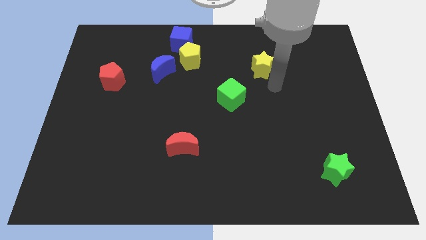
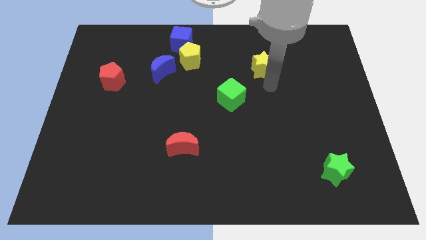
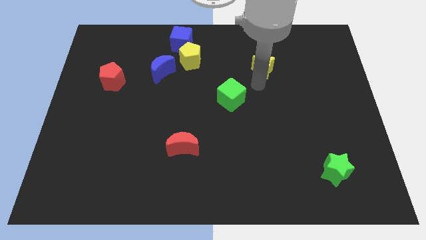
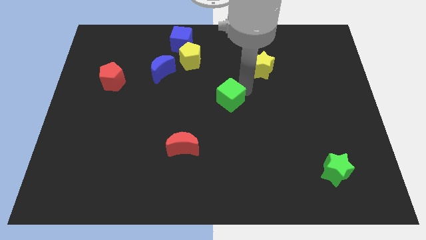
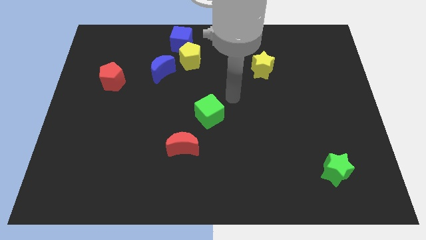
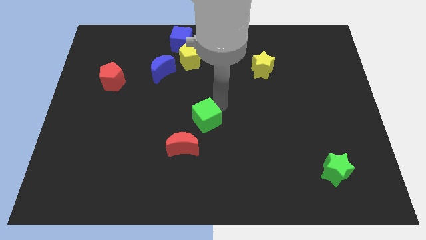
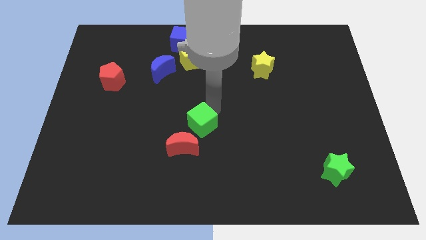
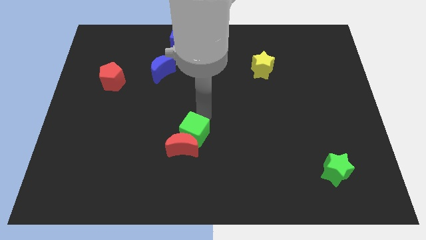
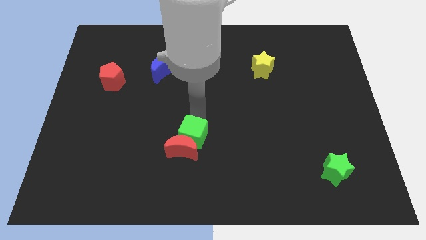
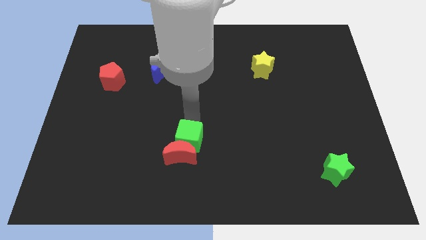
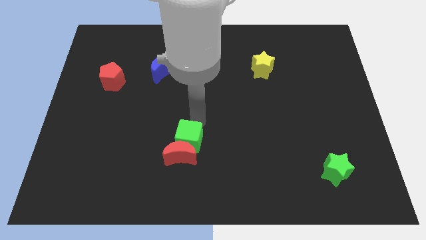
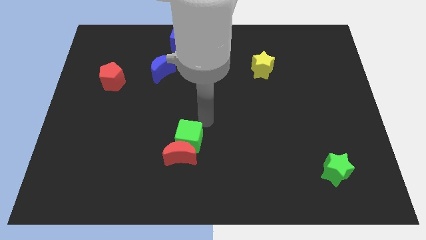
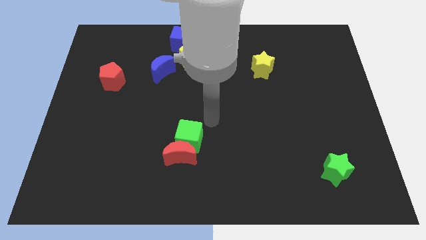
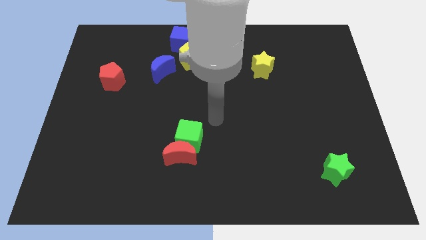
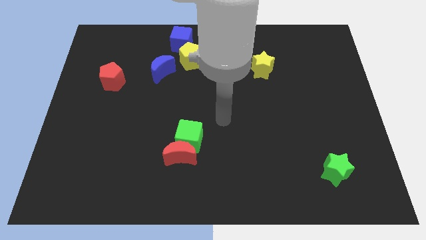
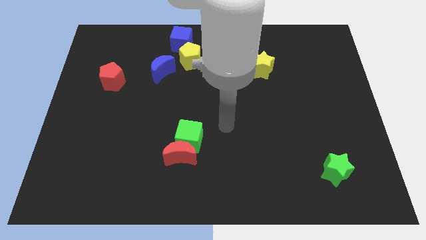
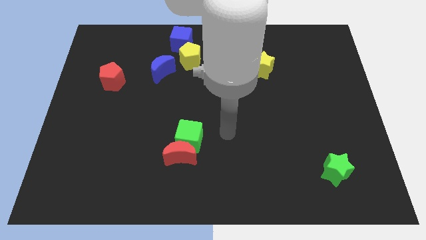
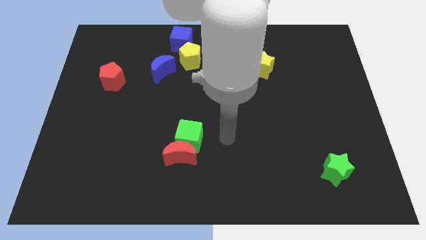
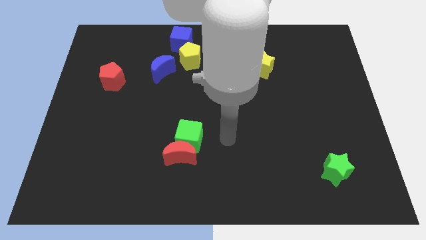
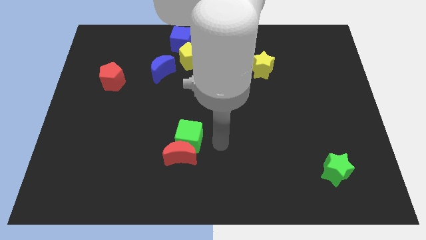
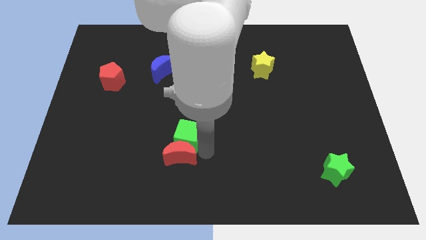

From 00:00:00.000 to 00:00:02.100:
push green cube into red crescent

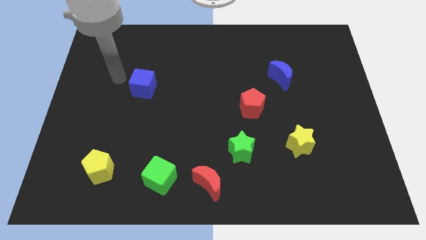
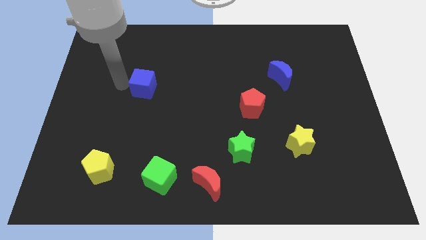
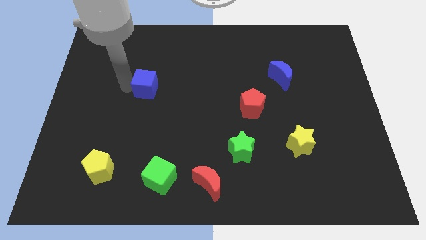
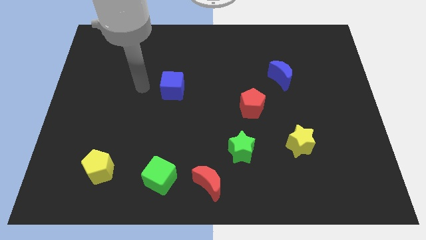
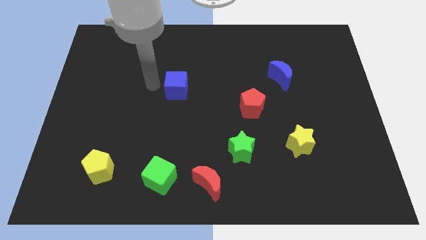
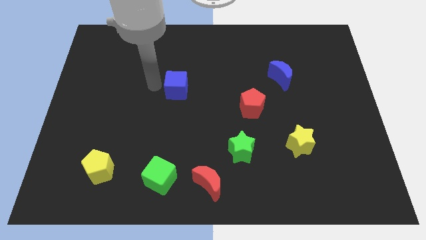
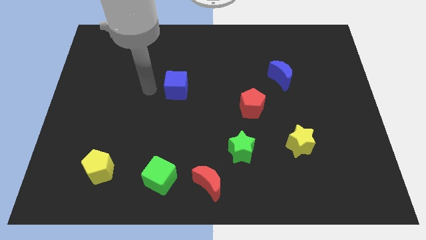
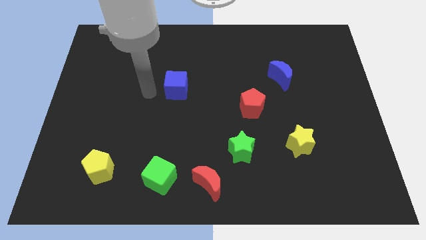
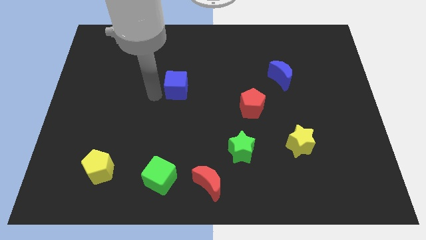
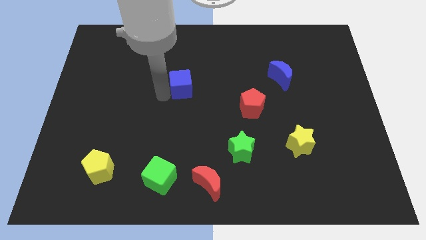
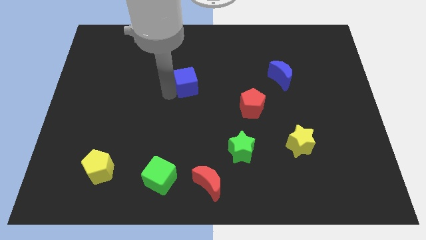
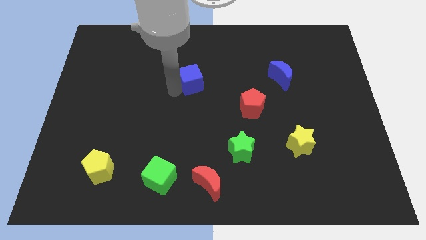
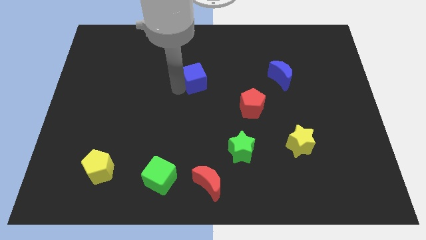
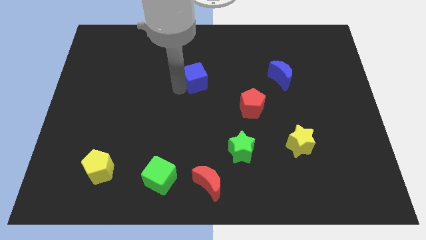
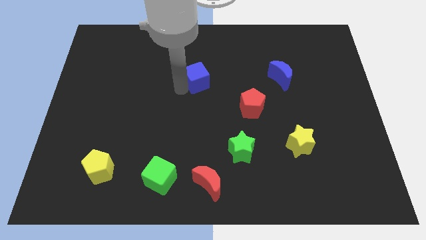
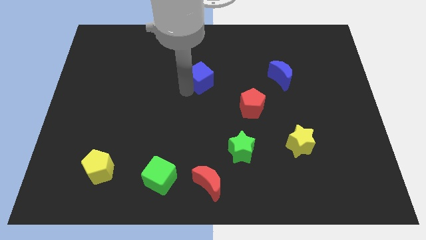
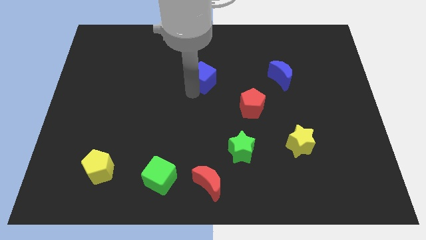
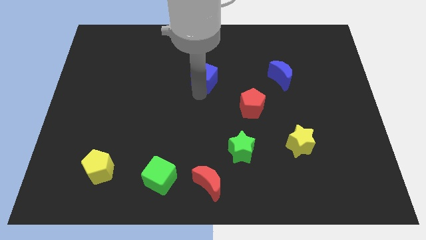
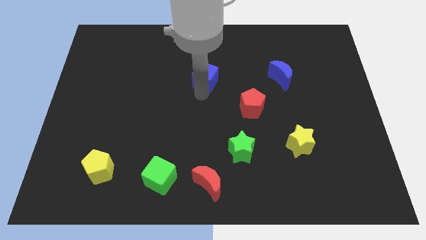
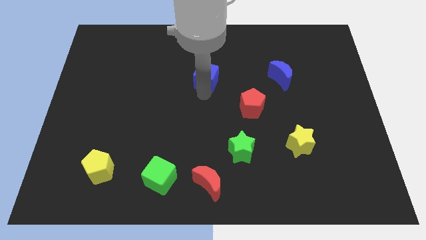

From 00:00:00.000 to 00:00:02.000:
drag the blue cube vertical to red crescent

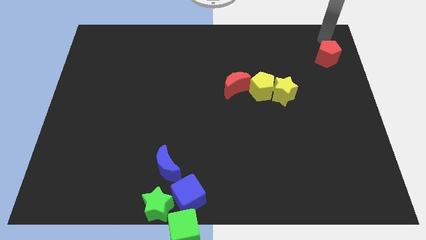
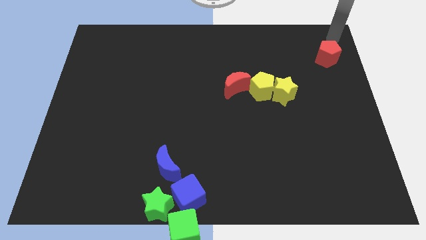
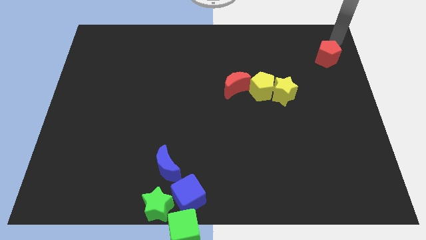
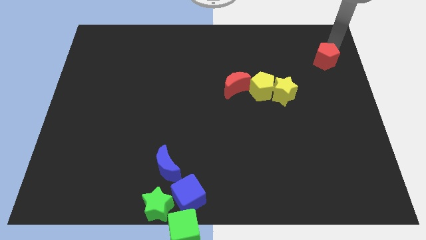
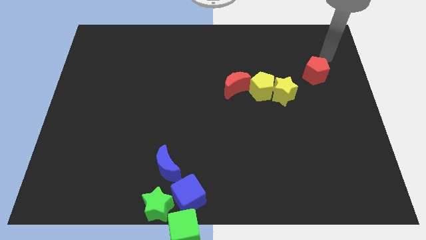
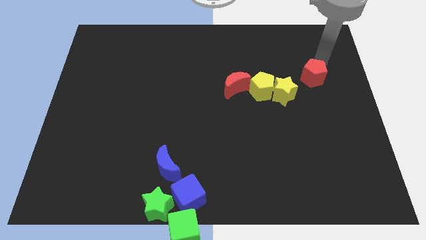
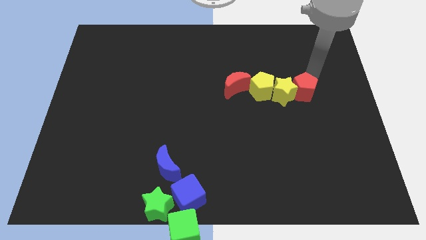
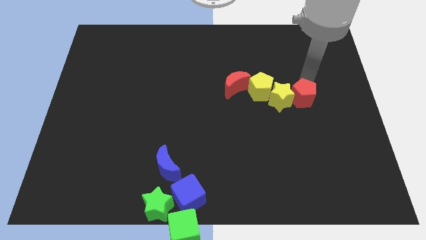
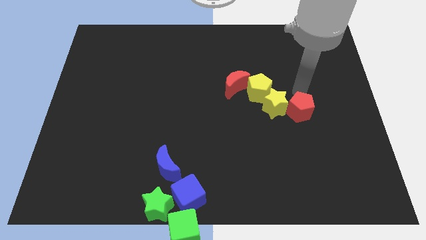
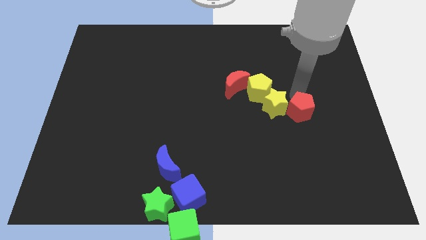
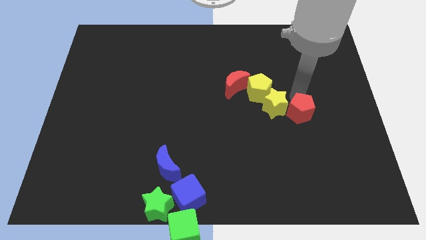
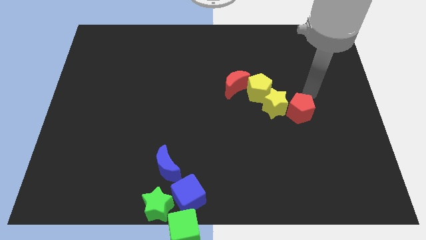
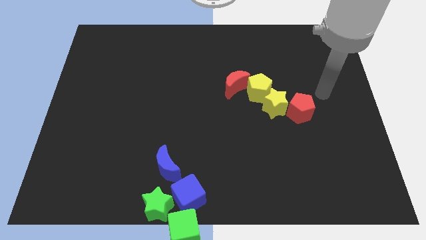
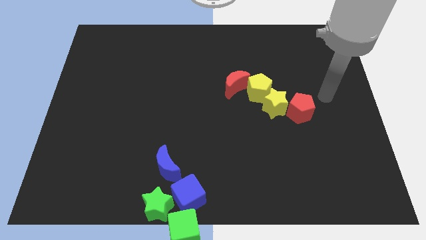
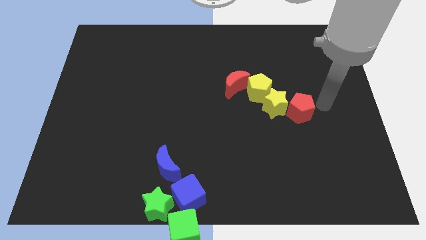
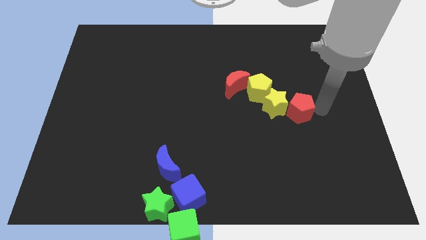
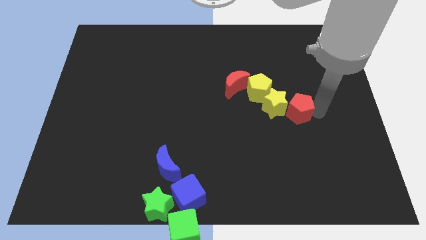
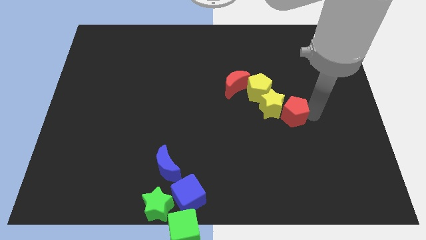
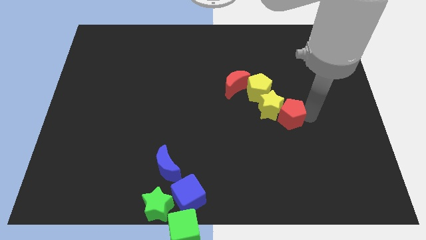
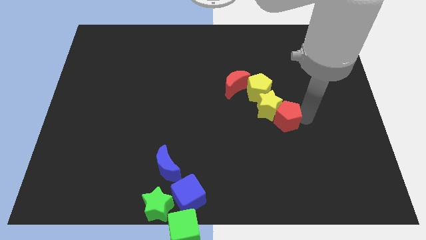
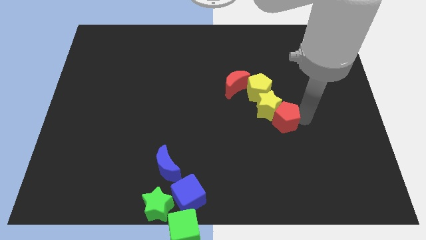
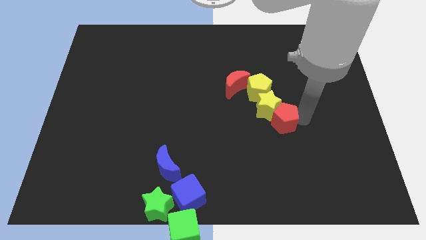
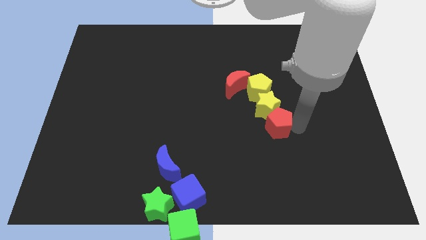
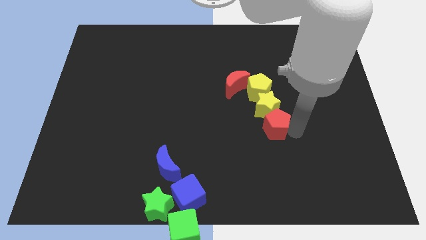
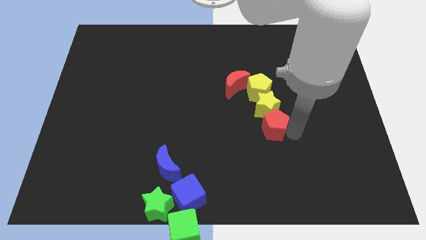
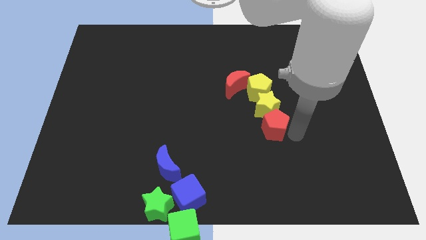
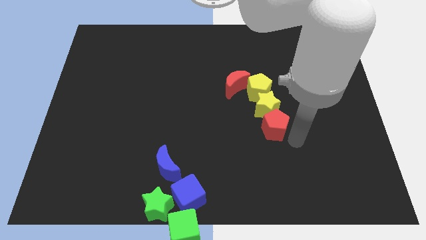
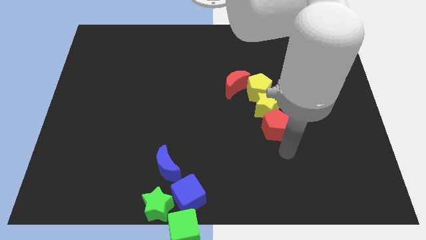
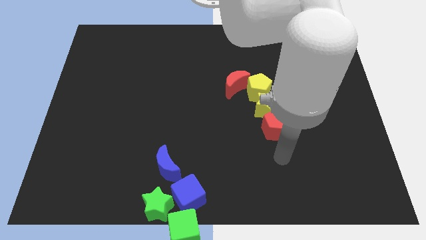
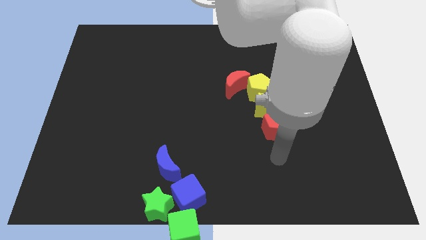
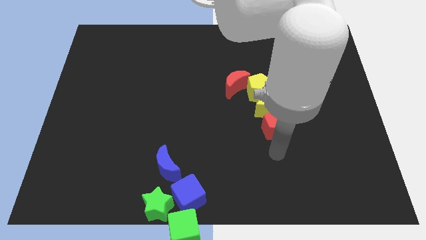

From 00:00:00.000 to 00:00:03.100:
move the red pentagon to the bottom side of the yellow star

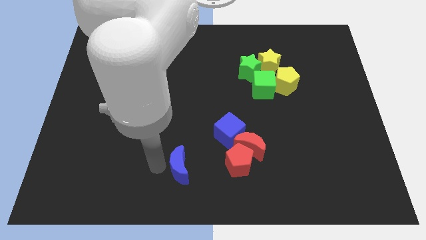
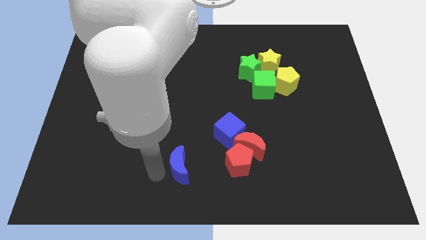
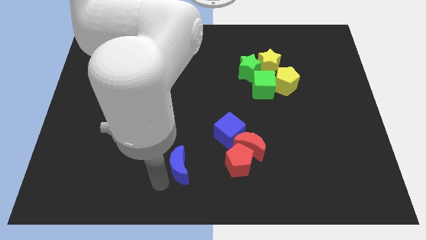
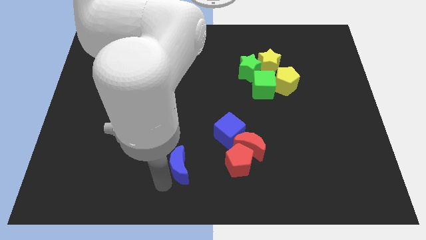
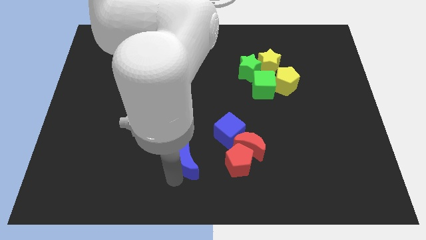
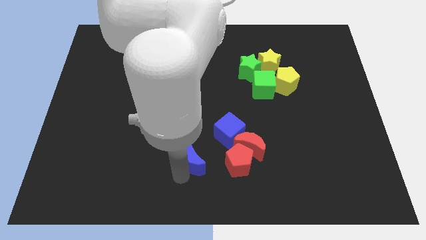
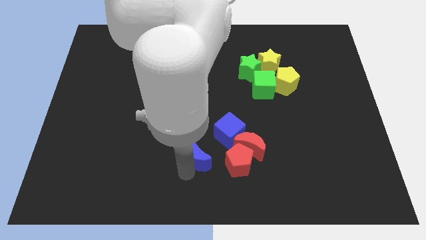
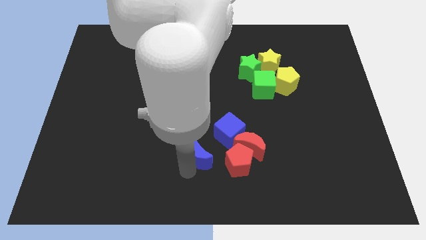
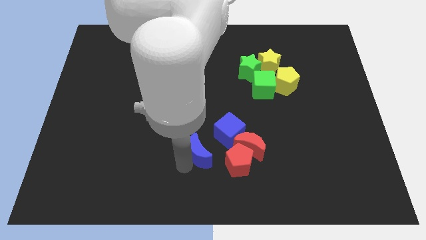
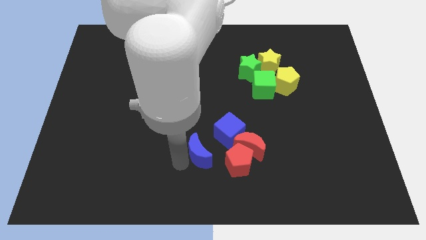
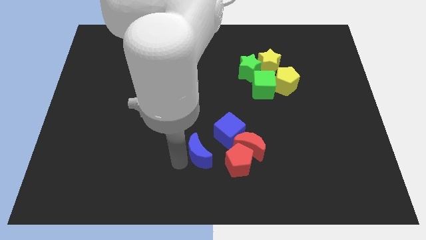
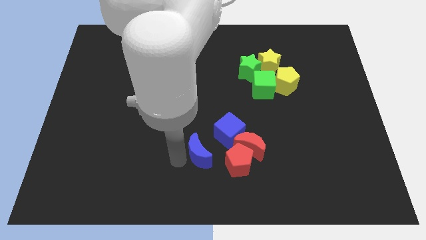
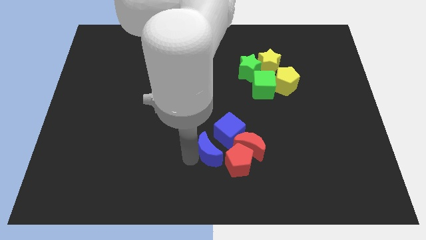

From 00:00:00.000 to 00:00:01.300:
push the blue crescent to the left of the red pentagon

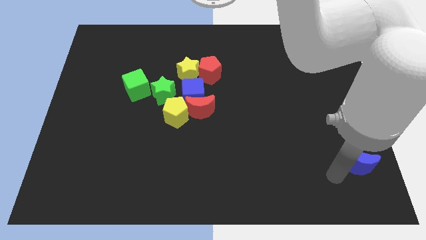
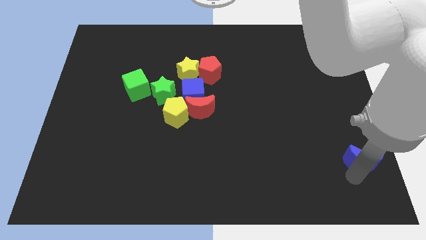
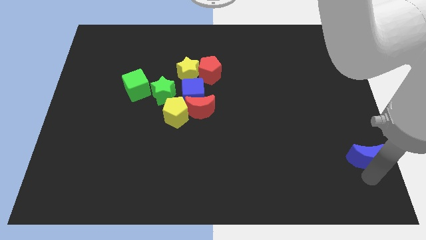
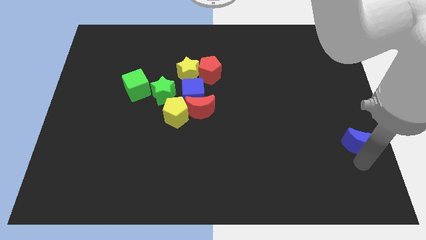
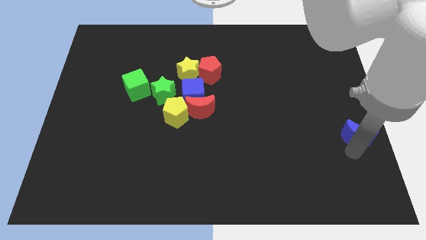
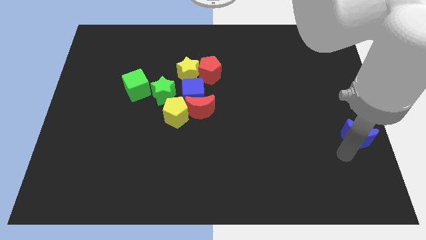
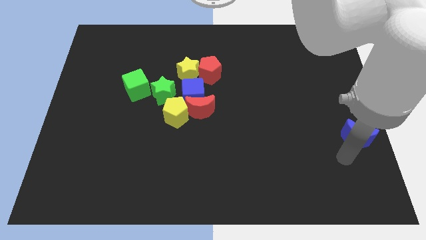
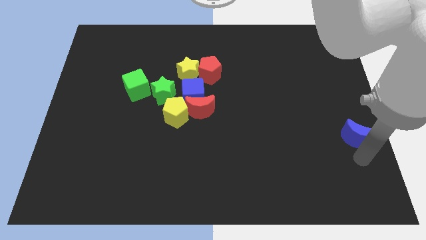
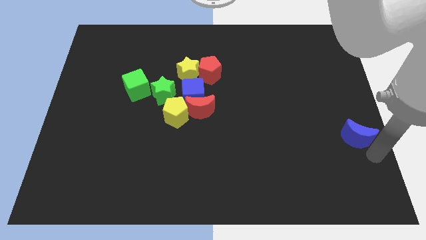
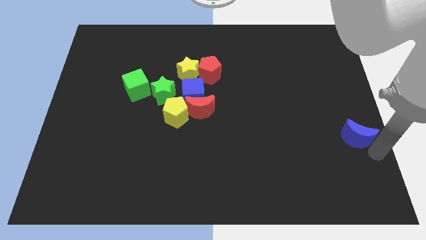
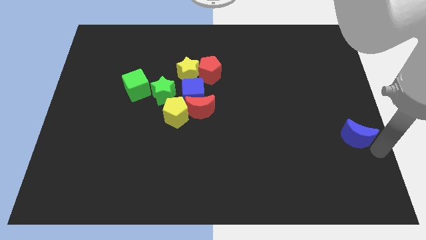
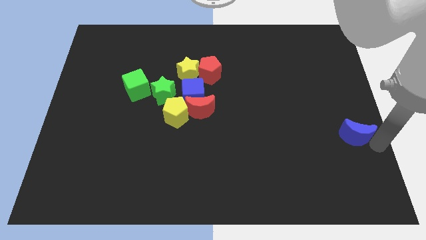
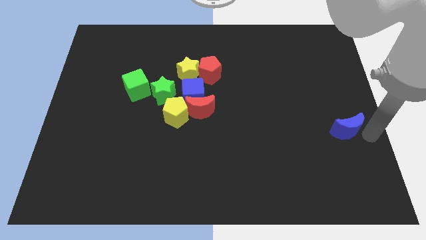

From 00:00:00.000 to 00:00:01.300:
slide the blue moon towards up
